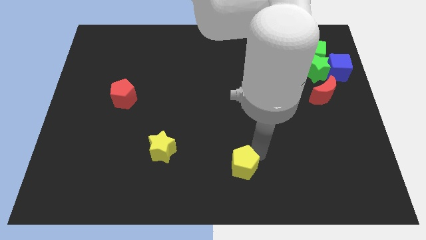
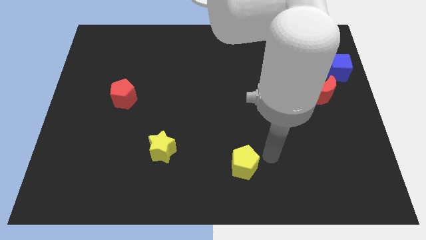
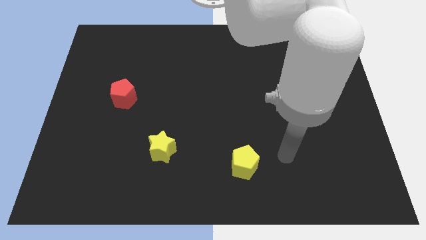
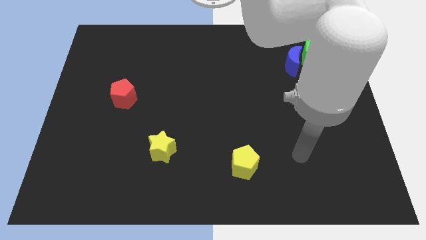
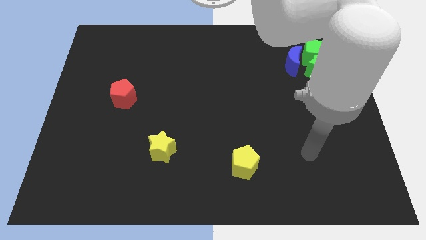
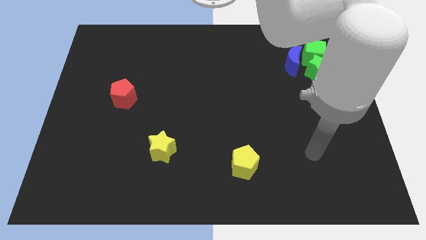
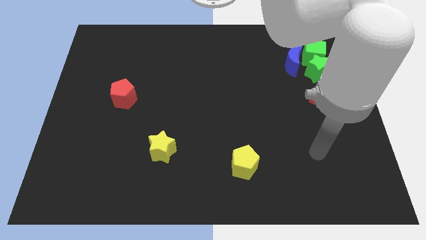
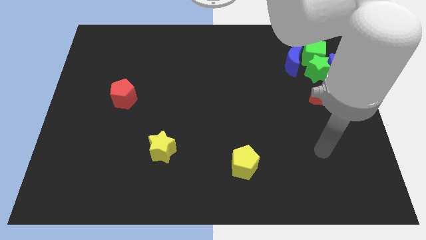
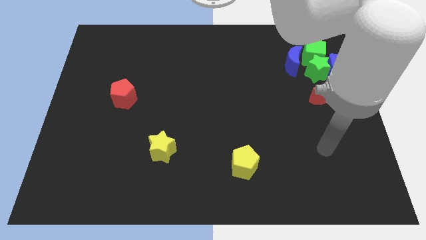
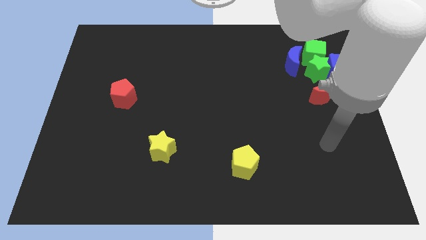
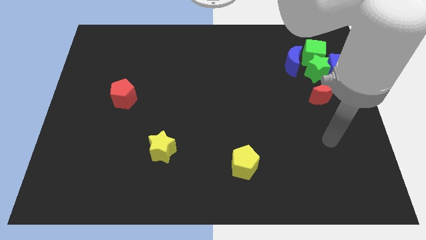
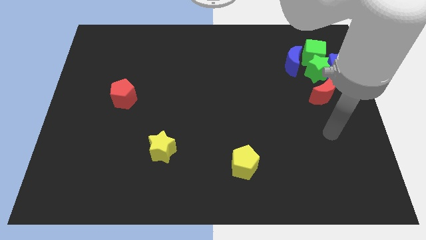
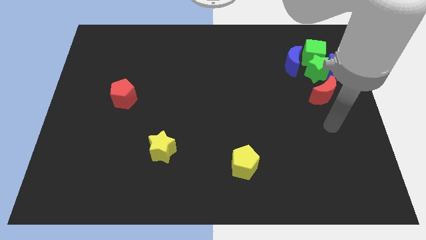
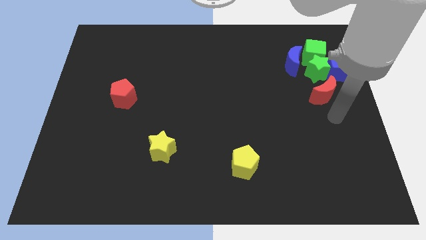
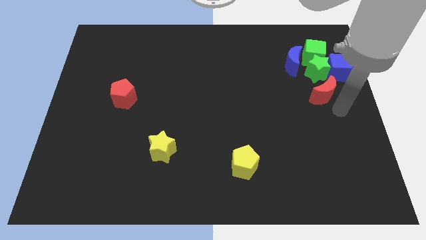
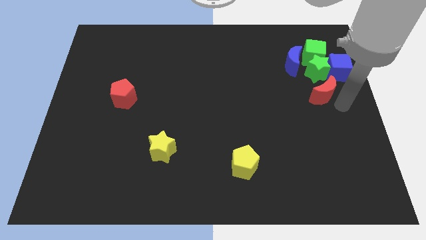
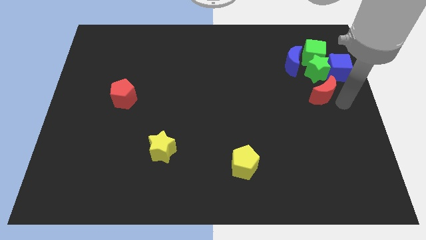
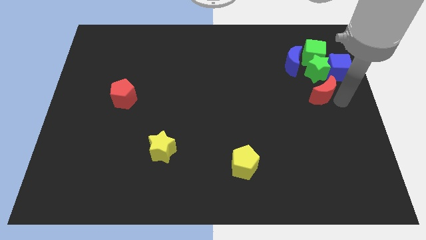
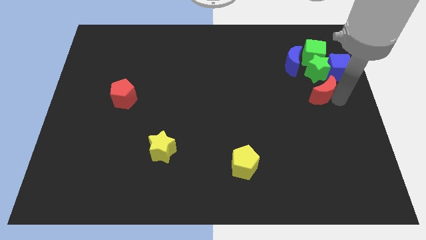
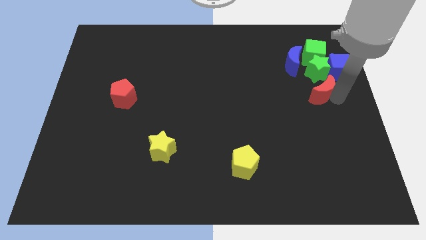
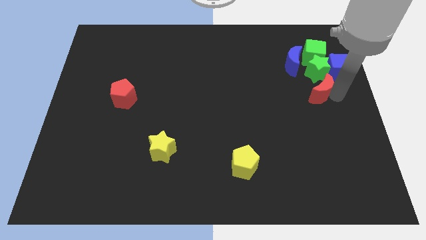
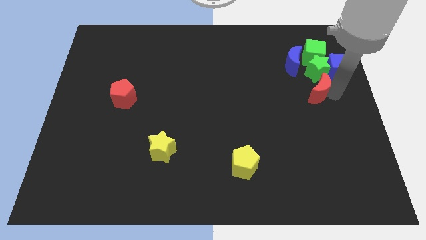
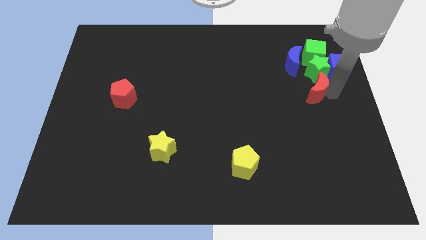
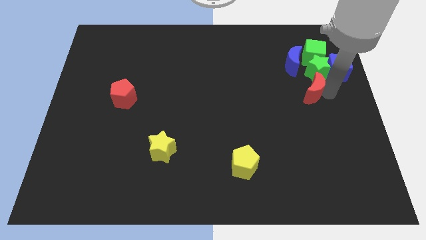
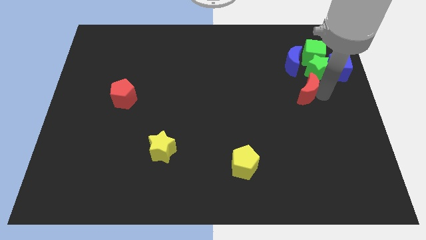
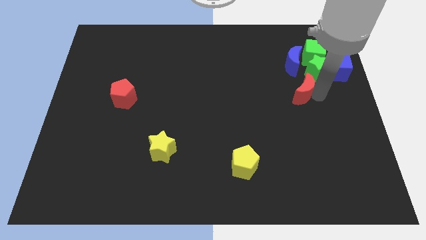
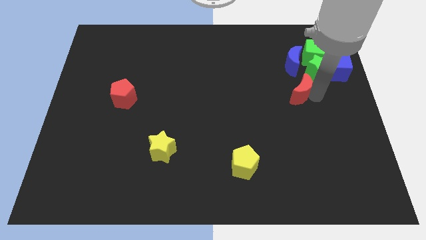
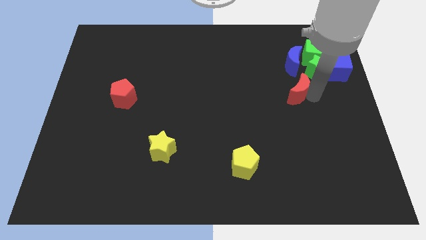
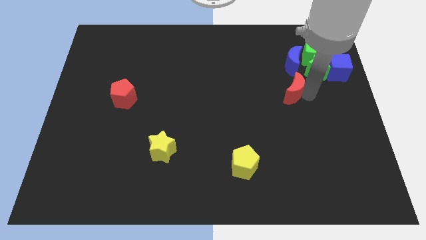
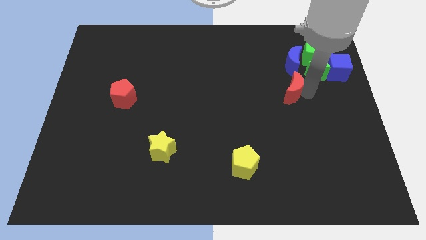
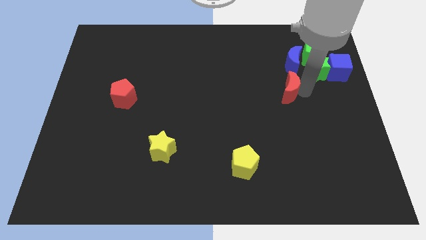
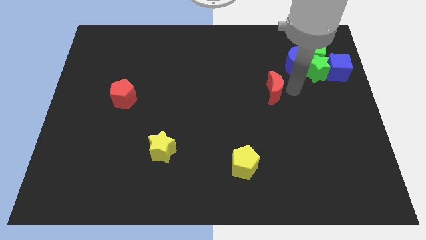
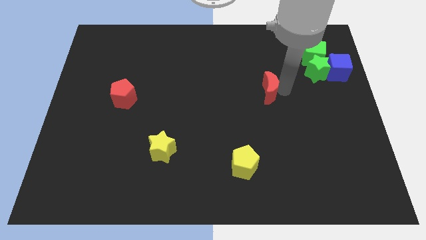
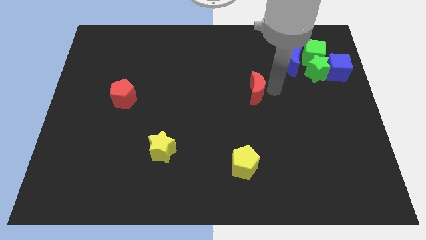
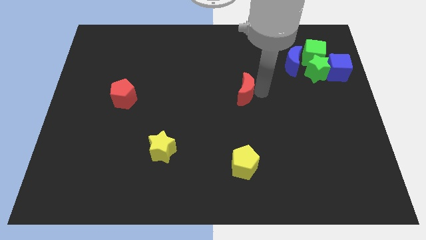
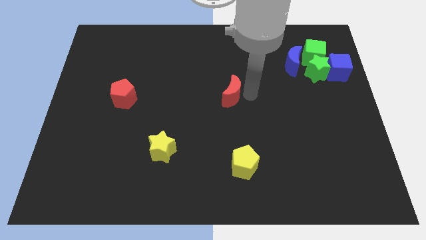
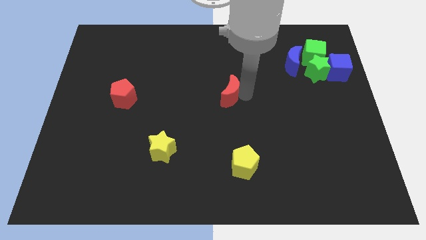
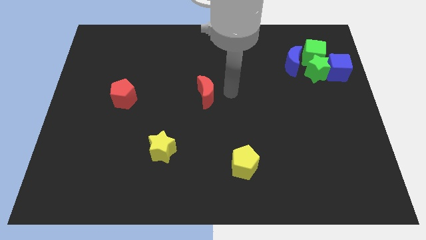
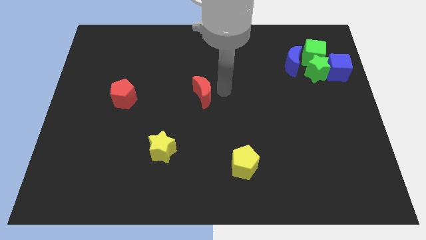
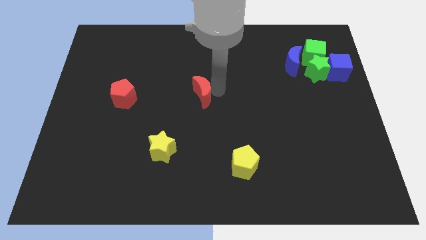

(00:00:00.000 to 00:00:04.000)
put the red crescent at the center of the board

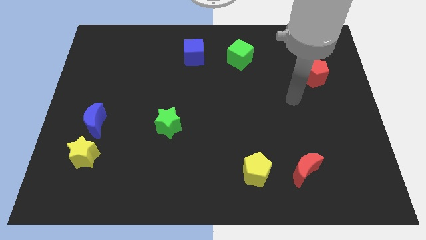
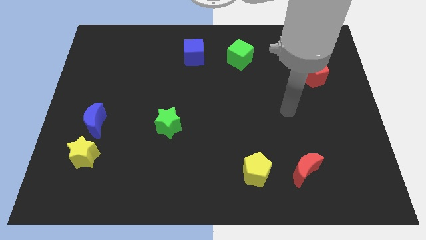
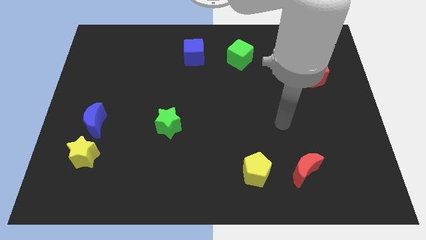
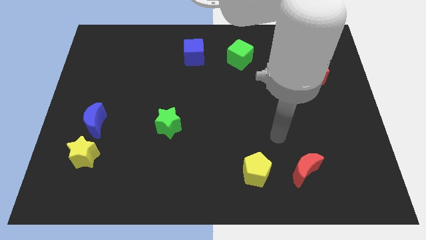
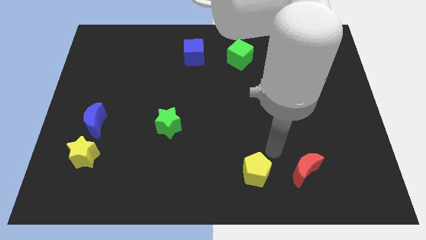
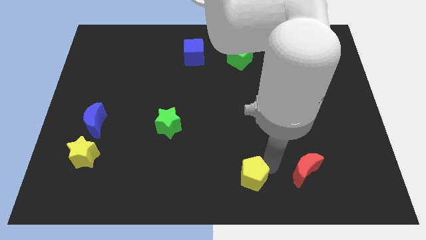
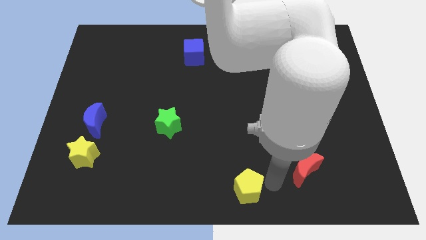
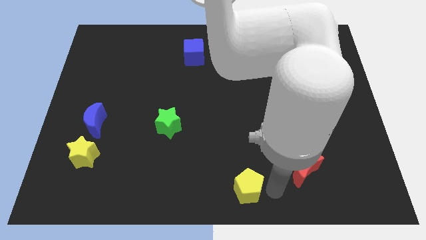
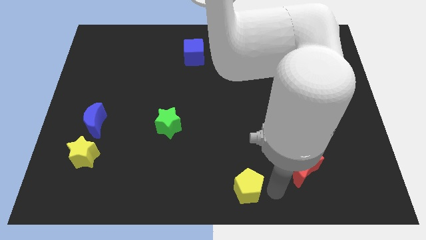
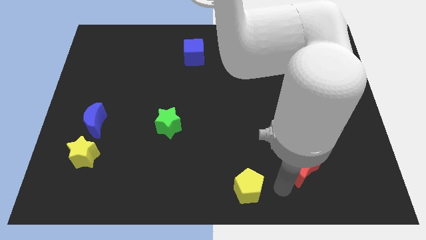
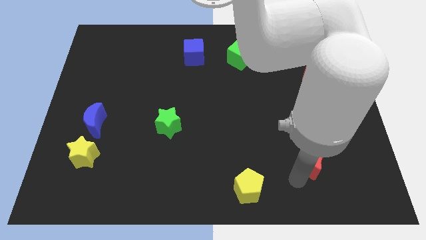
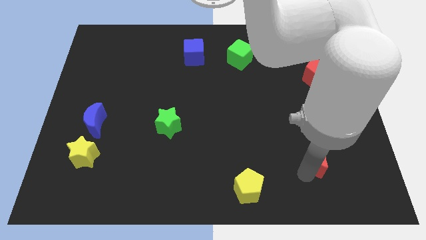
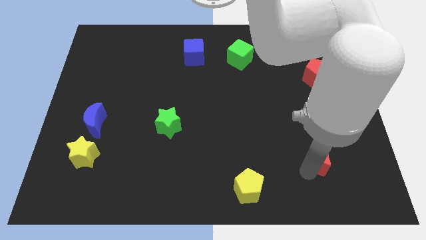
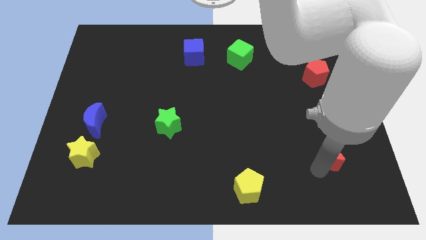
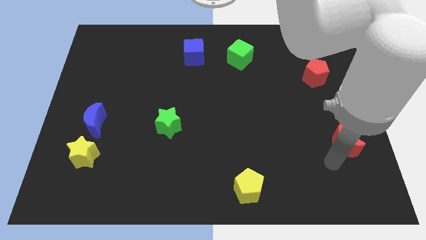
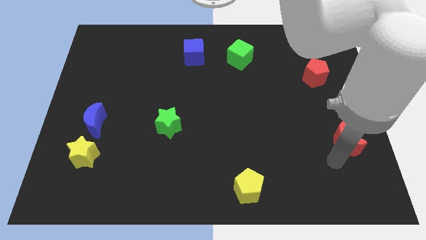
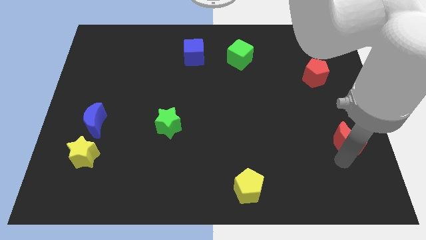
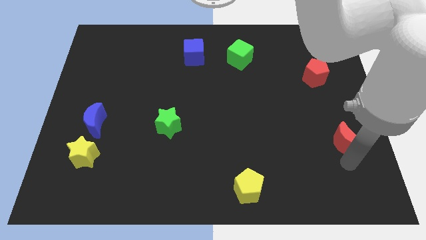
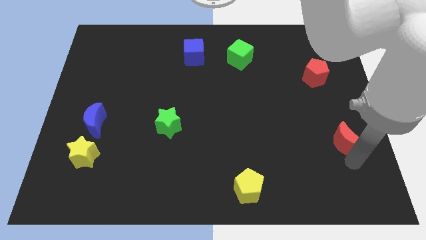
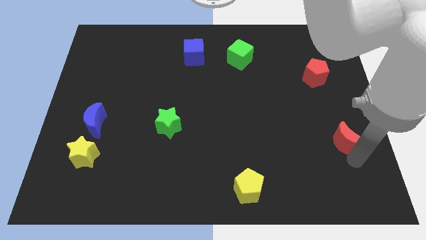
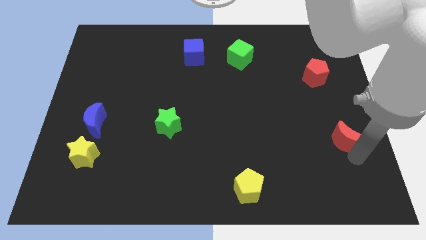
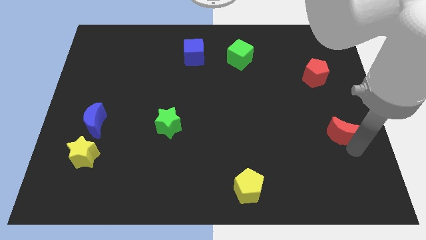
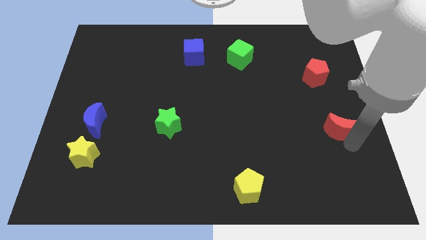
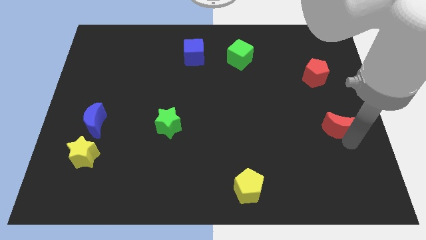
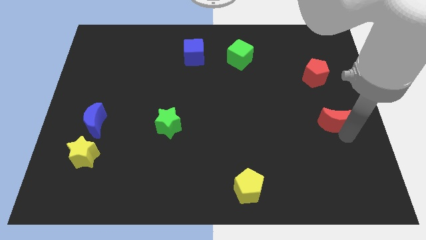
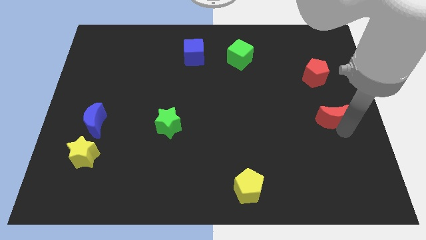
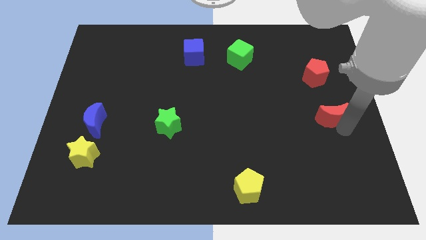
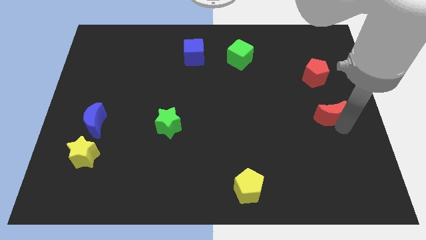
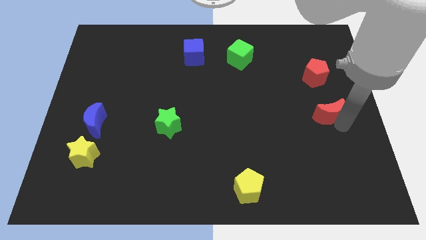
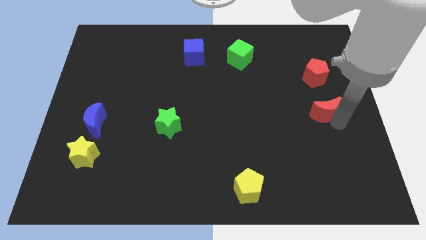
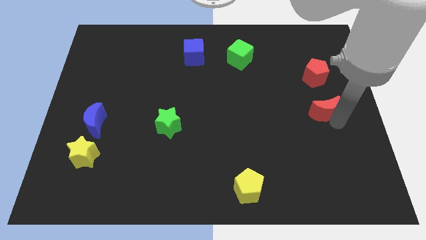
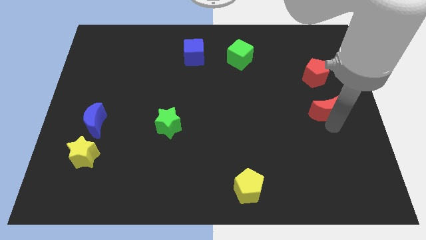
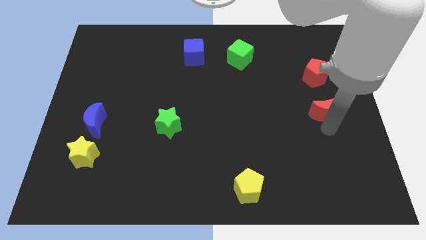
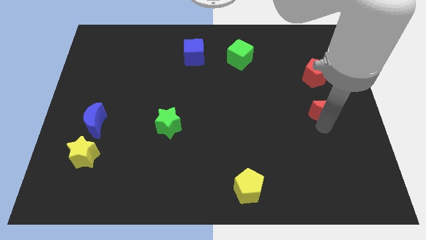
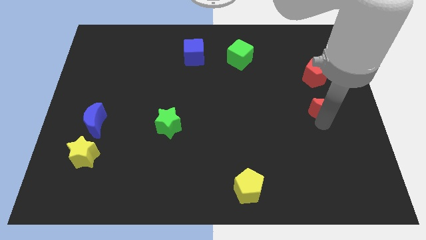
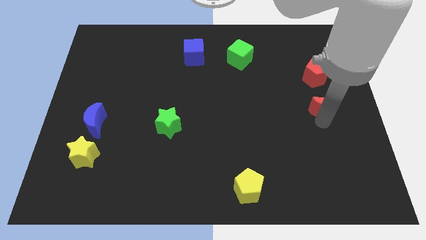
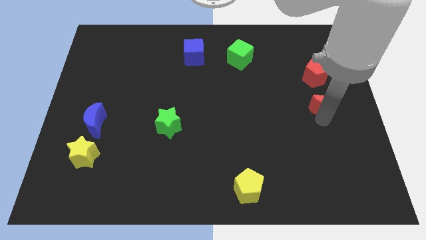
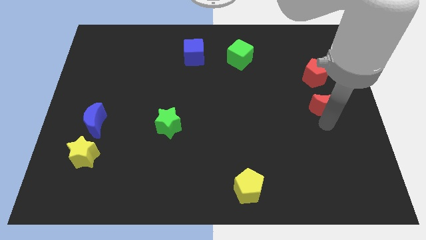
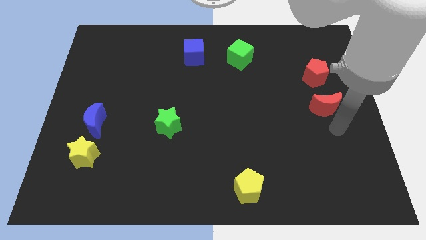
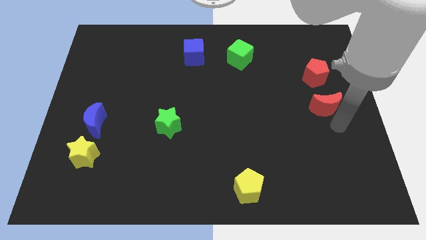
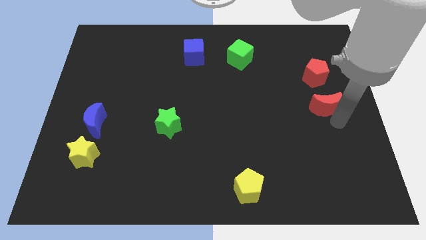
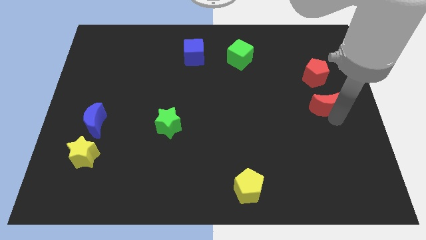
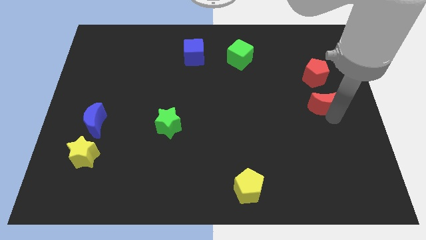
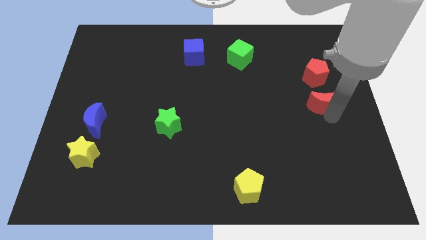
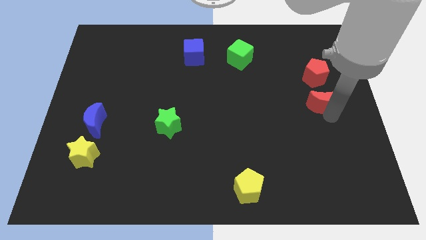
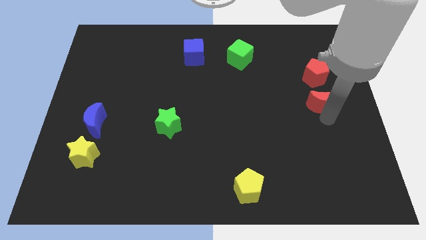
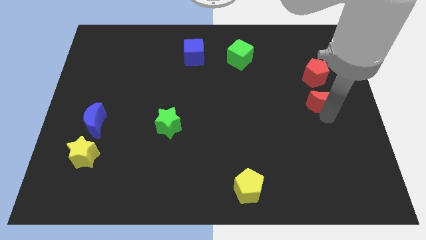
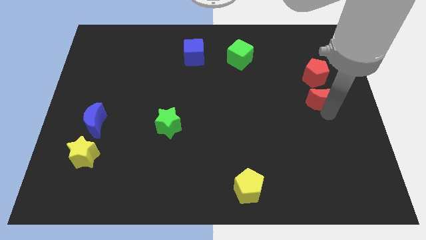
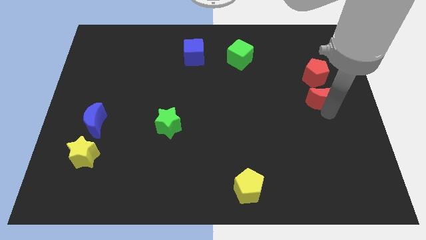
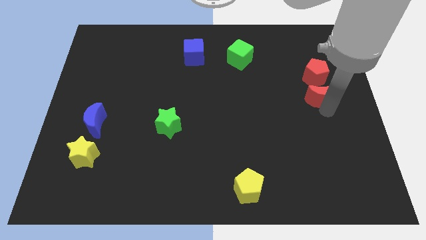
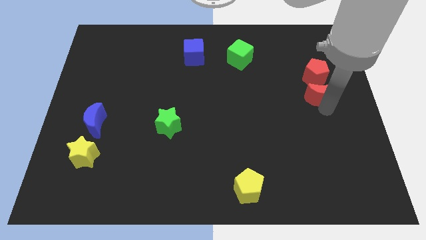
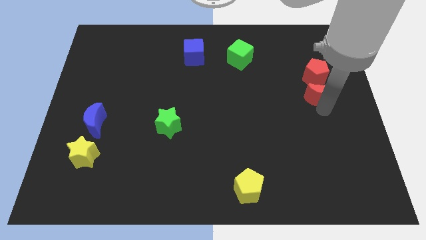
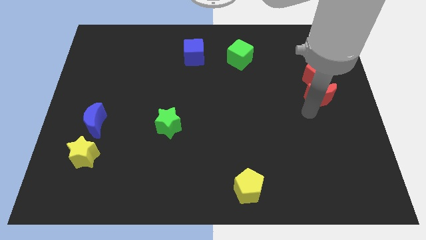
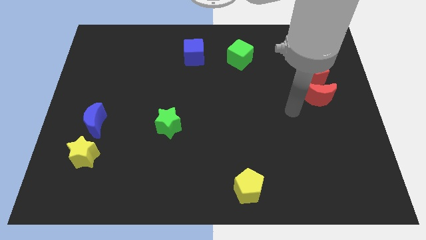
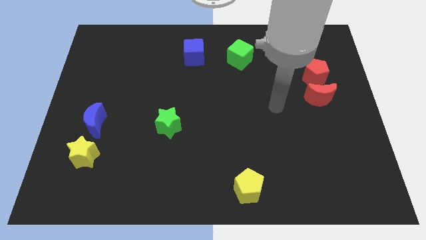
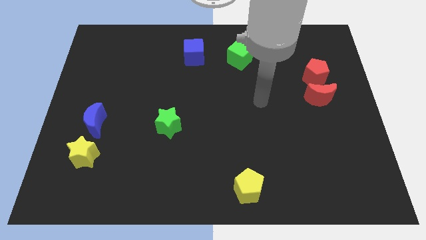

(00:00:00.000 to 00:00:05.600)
place the red crescent below the red pentagon
